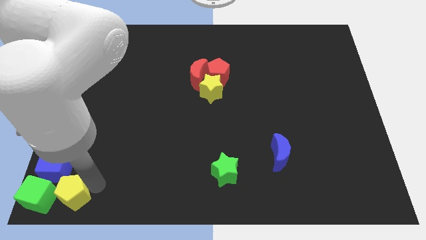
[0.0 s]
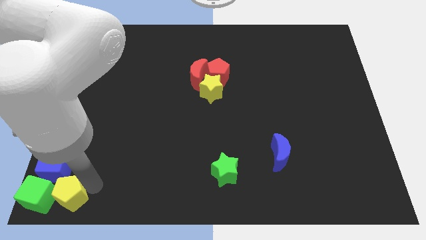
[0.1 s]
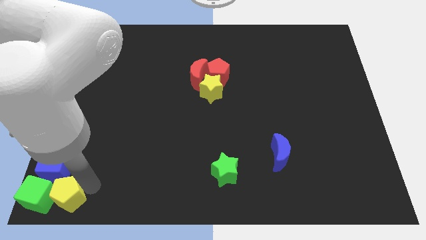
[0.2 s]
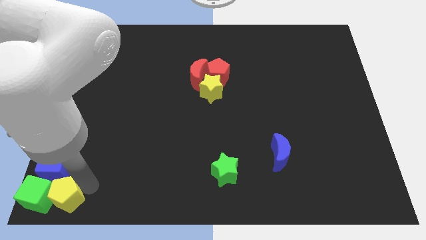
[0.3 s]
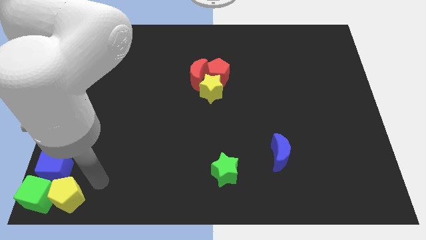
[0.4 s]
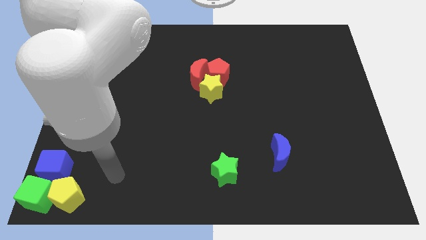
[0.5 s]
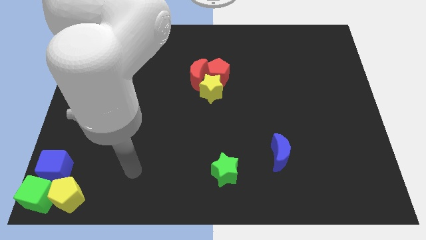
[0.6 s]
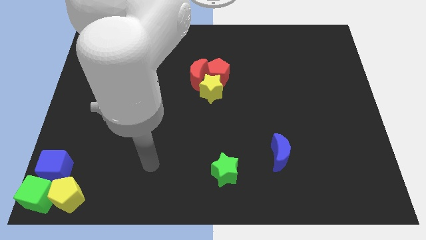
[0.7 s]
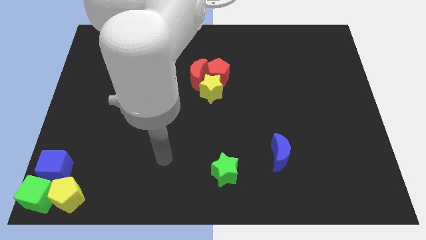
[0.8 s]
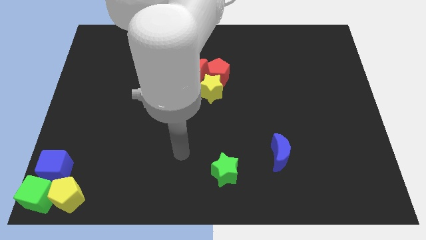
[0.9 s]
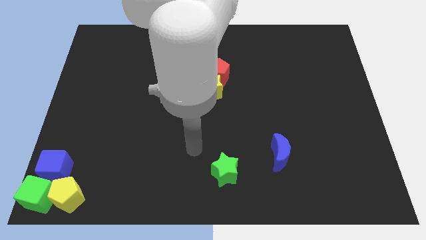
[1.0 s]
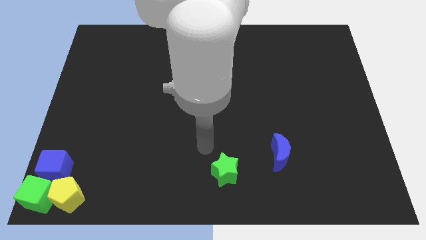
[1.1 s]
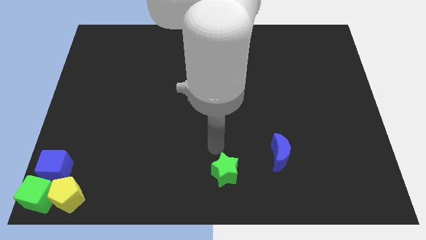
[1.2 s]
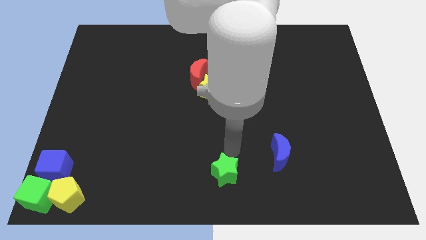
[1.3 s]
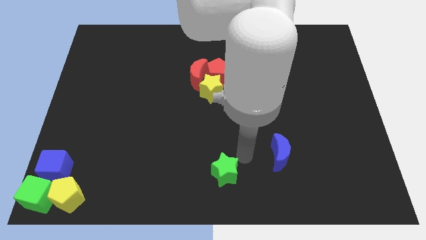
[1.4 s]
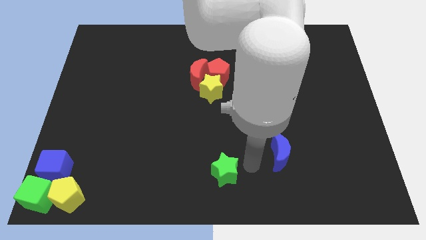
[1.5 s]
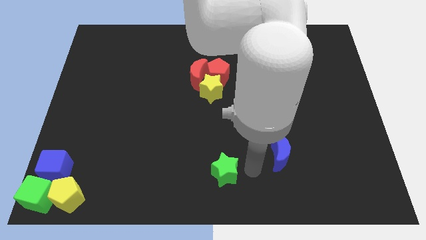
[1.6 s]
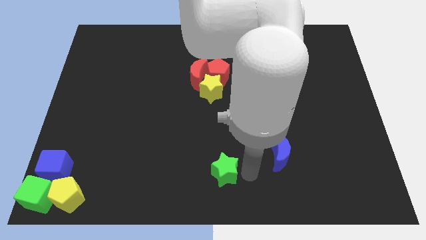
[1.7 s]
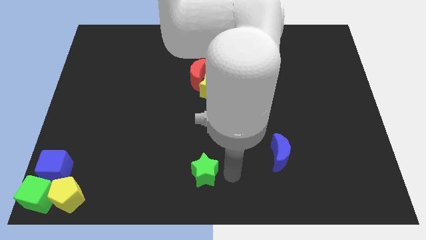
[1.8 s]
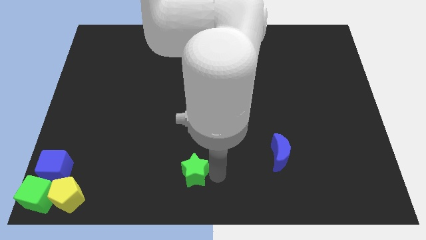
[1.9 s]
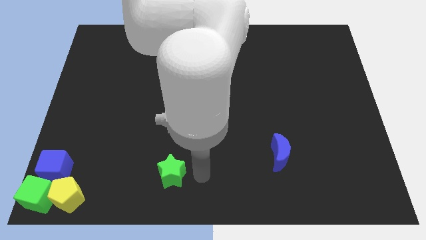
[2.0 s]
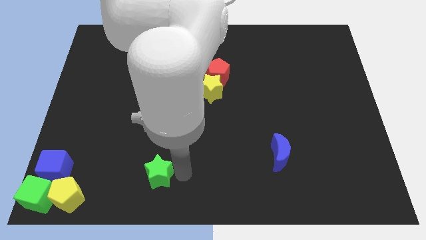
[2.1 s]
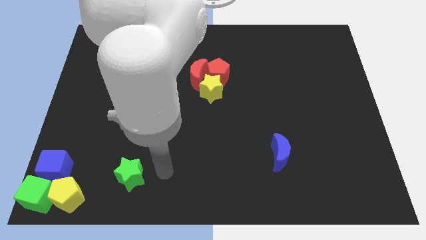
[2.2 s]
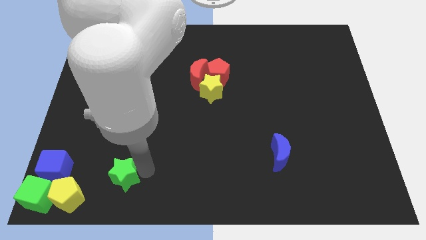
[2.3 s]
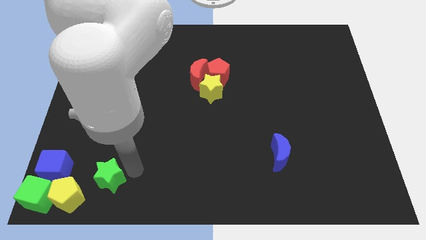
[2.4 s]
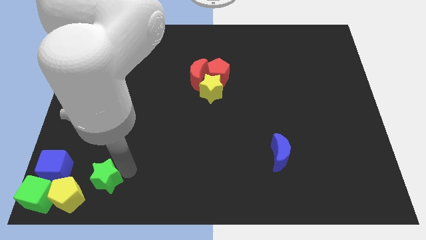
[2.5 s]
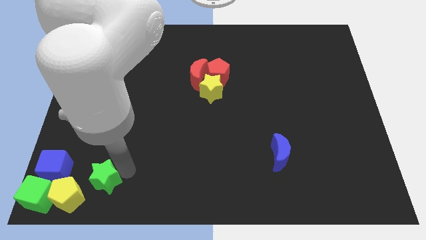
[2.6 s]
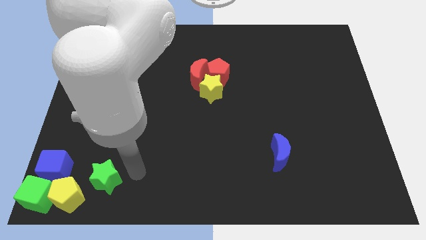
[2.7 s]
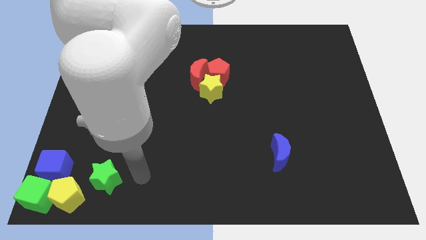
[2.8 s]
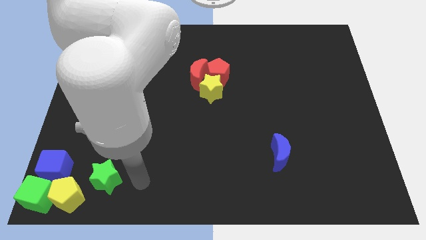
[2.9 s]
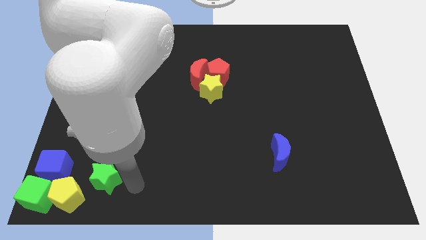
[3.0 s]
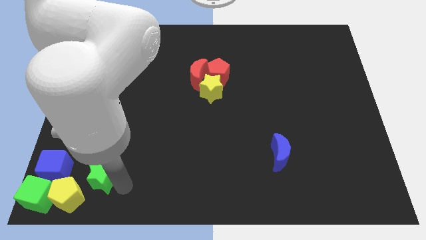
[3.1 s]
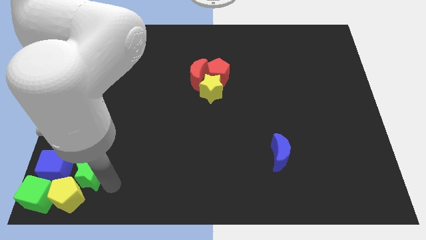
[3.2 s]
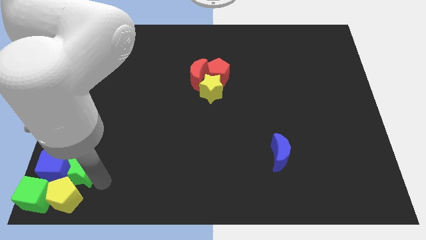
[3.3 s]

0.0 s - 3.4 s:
push the green star into blue cube

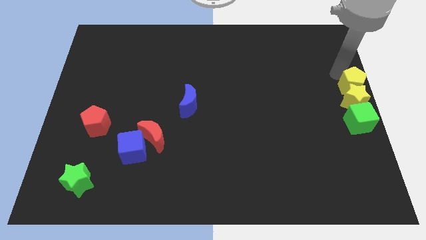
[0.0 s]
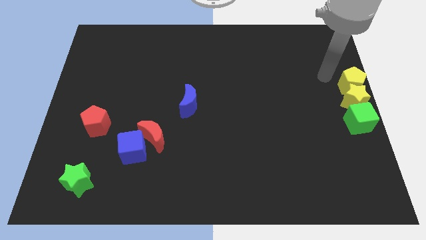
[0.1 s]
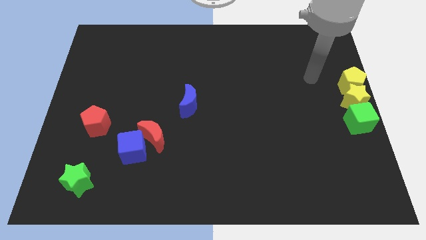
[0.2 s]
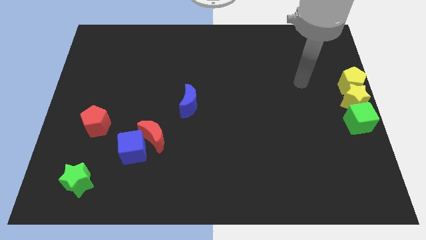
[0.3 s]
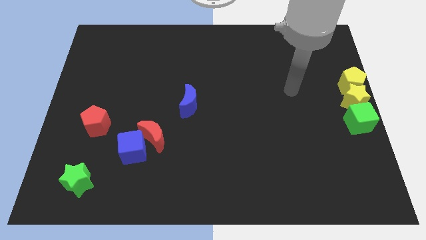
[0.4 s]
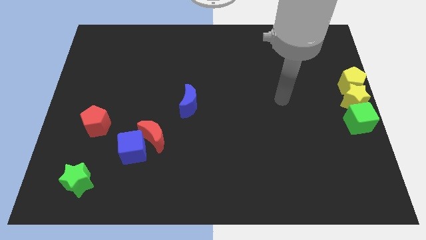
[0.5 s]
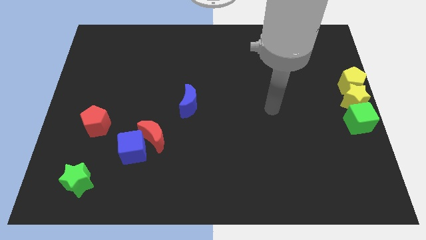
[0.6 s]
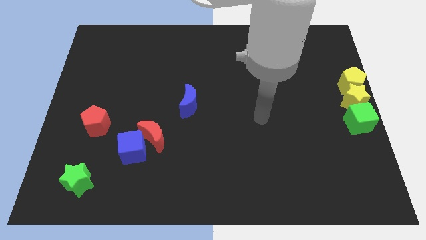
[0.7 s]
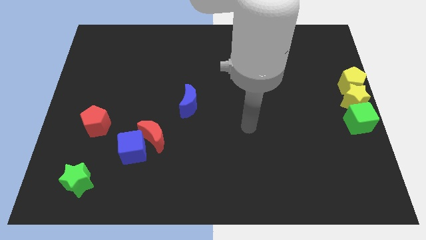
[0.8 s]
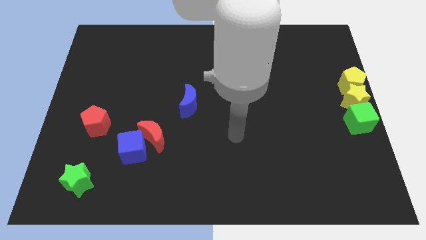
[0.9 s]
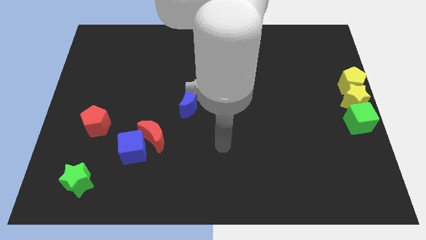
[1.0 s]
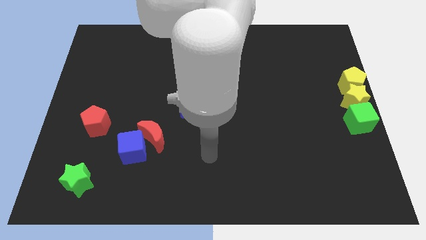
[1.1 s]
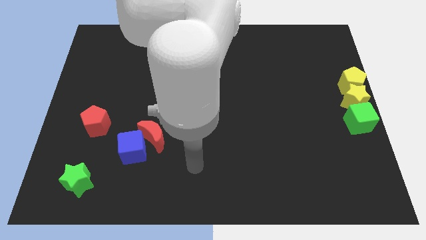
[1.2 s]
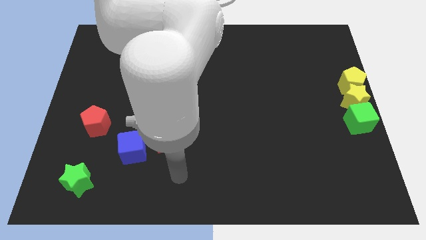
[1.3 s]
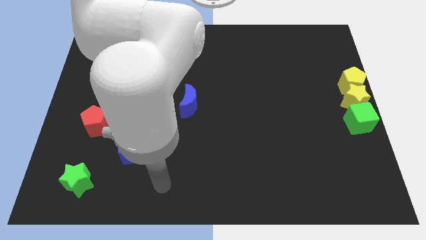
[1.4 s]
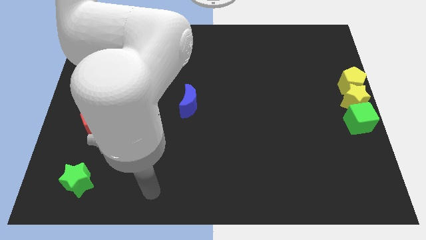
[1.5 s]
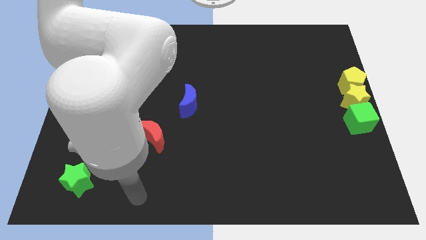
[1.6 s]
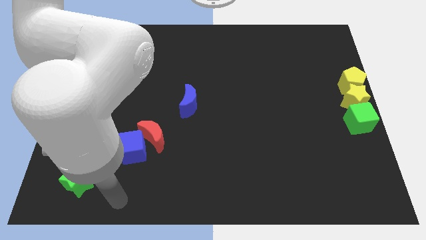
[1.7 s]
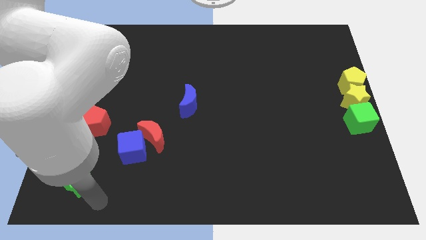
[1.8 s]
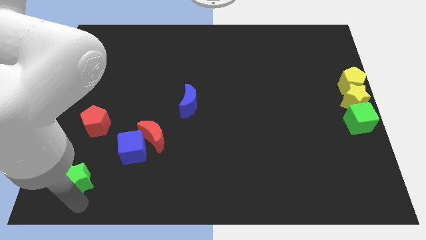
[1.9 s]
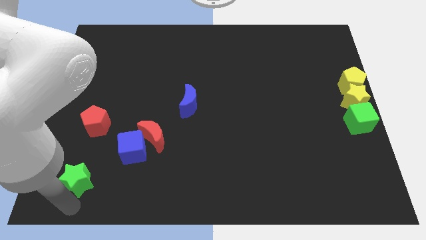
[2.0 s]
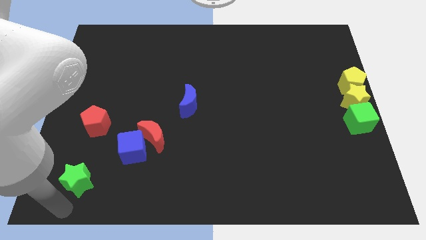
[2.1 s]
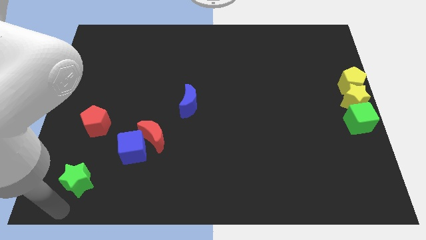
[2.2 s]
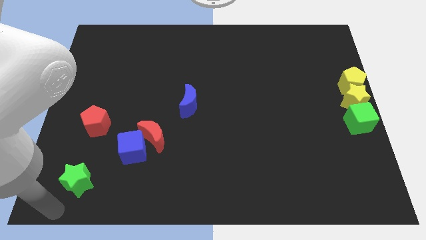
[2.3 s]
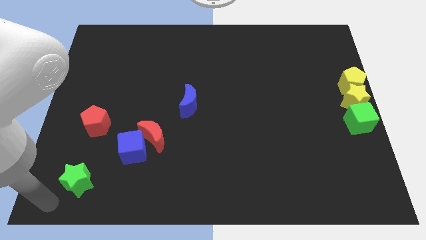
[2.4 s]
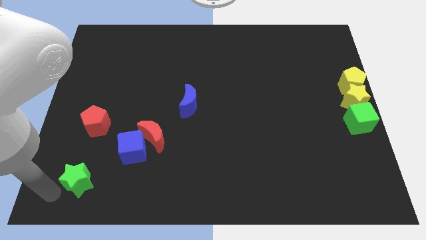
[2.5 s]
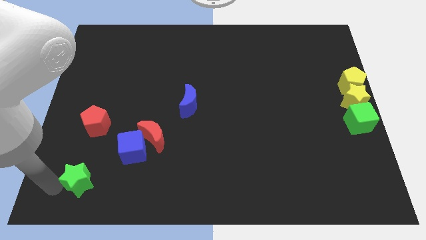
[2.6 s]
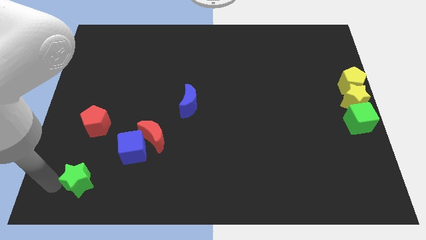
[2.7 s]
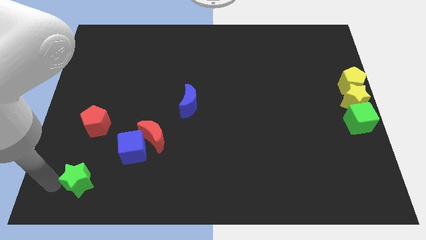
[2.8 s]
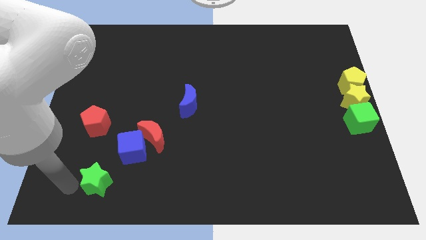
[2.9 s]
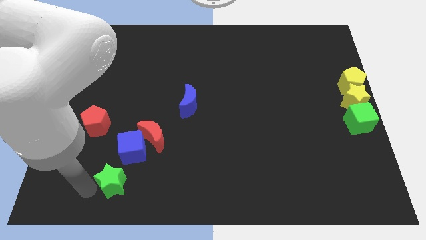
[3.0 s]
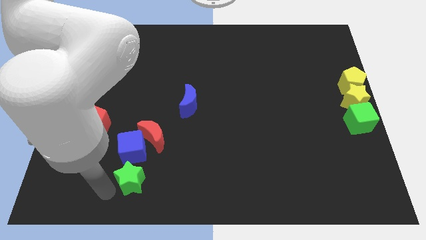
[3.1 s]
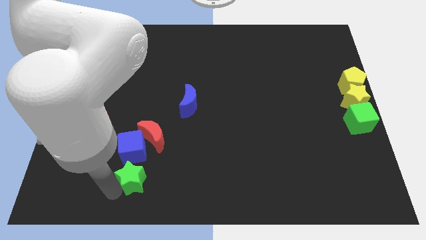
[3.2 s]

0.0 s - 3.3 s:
move the green star to the bottom side of the blue cube

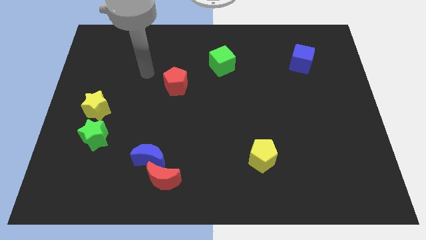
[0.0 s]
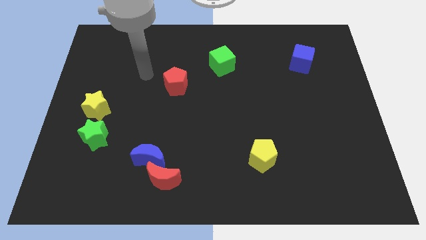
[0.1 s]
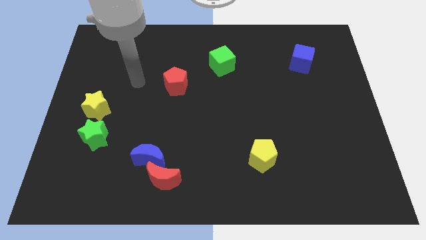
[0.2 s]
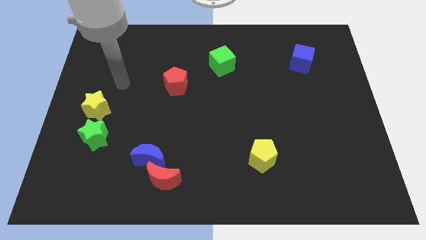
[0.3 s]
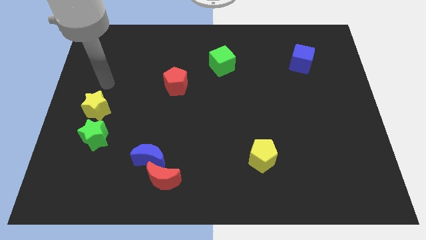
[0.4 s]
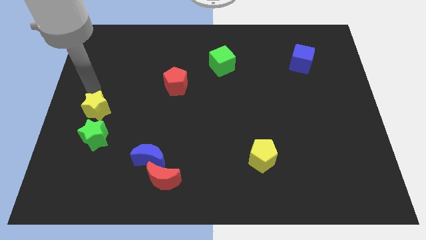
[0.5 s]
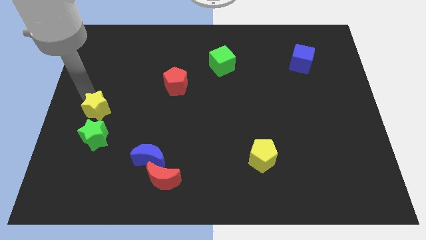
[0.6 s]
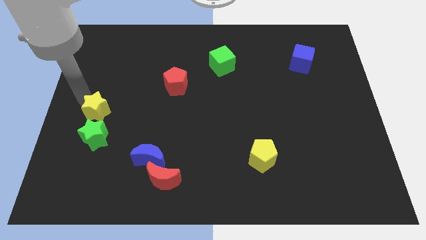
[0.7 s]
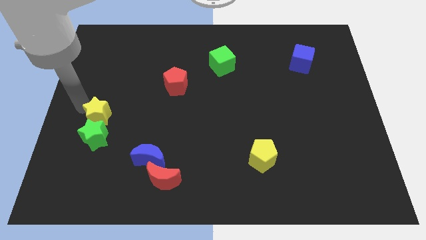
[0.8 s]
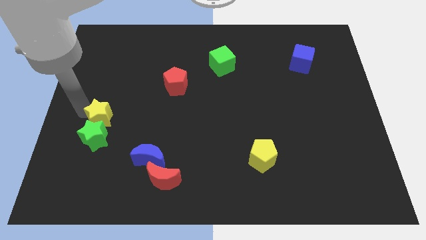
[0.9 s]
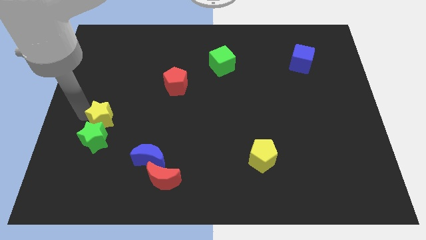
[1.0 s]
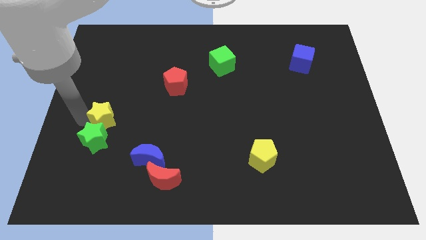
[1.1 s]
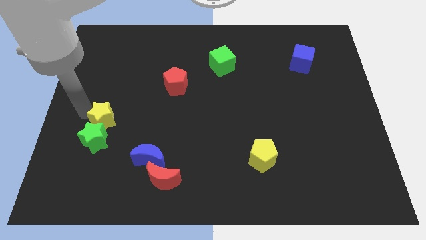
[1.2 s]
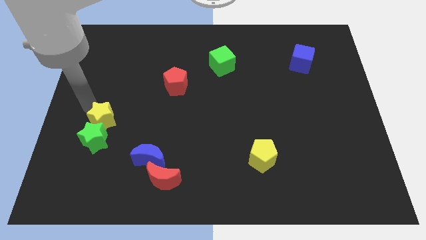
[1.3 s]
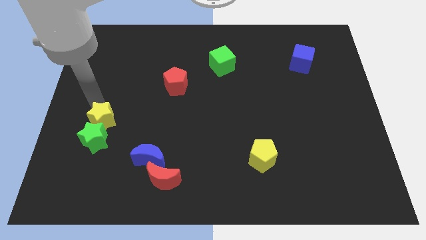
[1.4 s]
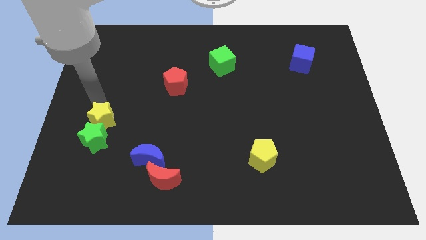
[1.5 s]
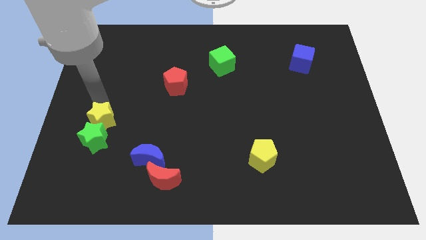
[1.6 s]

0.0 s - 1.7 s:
move the yellow star into the green star

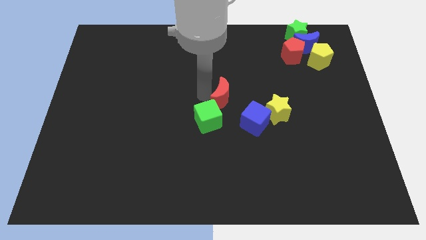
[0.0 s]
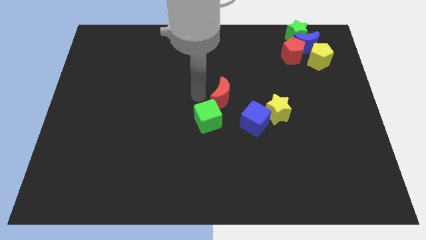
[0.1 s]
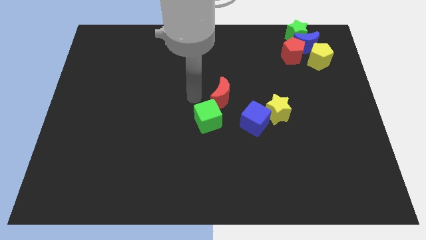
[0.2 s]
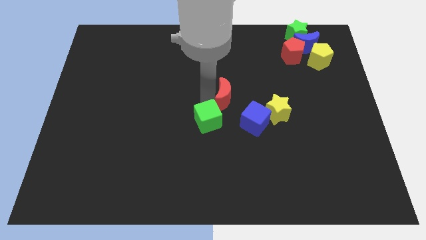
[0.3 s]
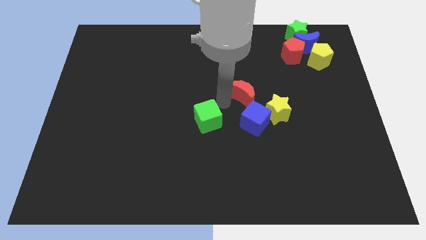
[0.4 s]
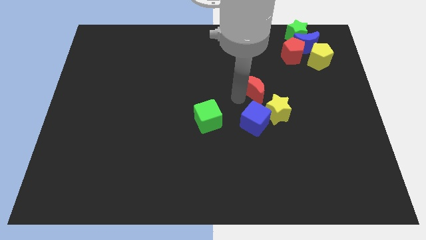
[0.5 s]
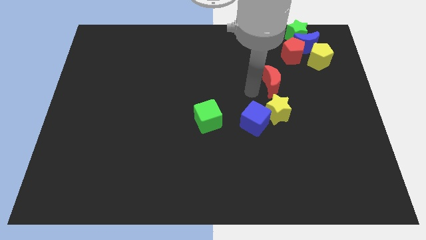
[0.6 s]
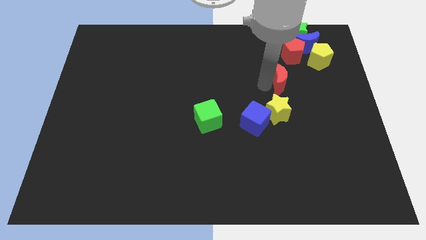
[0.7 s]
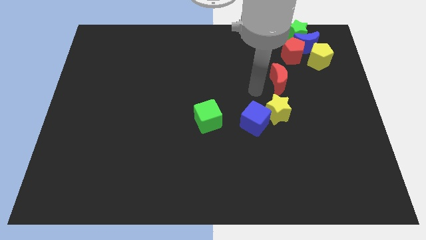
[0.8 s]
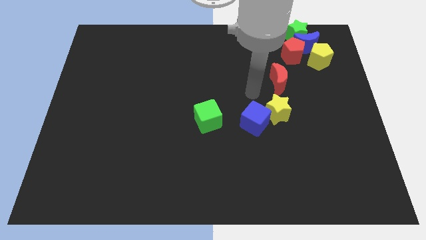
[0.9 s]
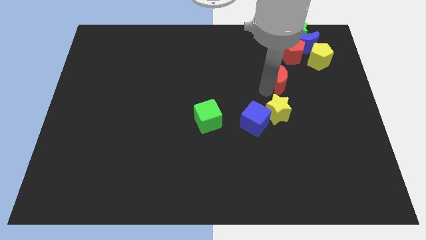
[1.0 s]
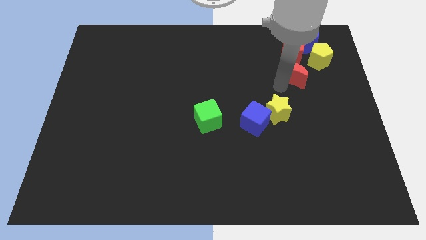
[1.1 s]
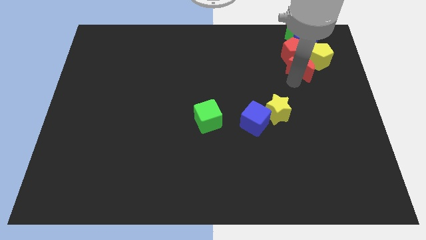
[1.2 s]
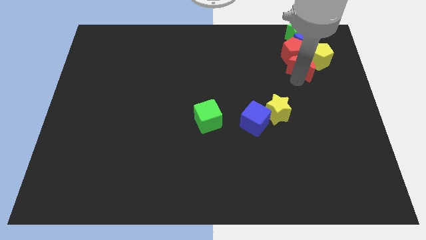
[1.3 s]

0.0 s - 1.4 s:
push the red crescent to the bottom of the red pentagon
